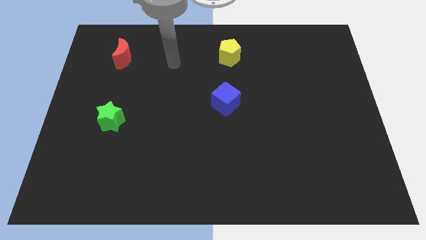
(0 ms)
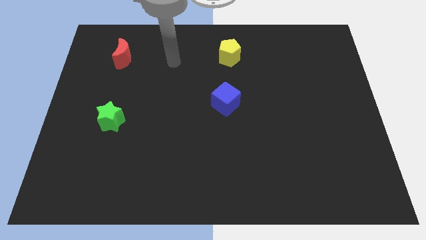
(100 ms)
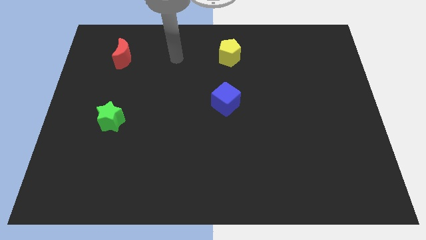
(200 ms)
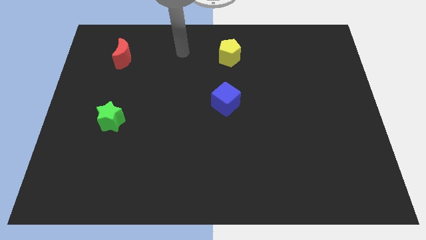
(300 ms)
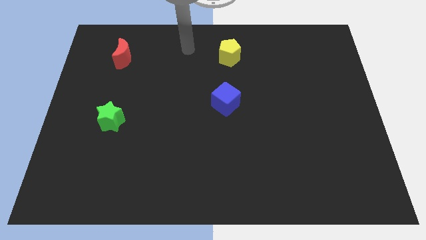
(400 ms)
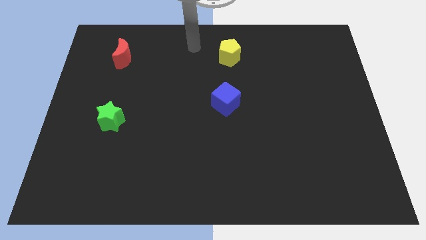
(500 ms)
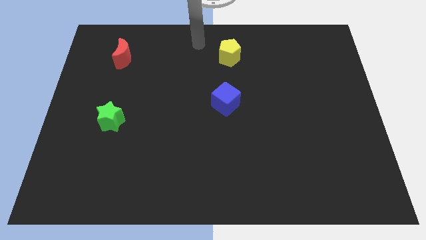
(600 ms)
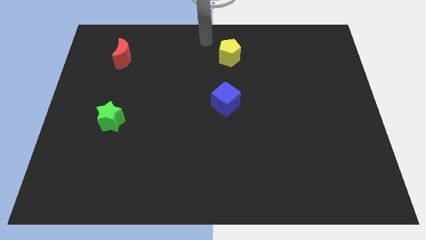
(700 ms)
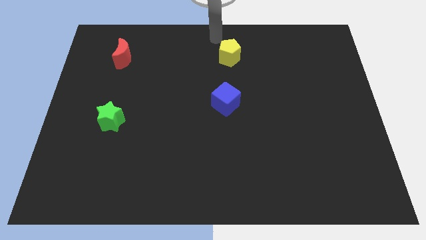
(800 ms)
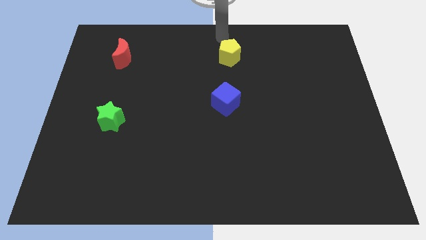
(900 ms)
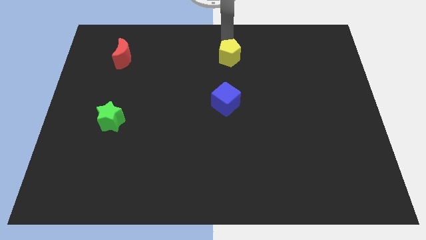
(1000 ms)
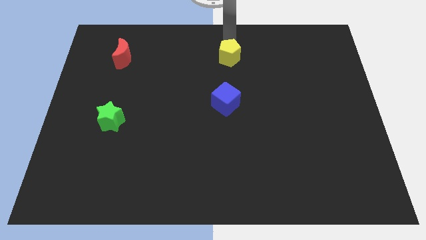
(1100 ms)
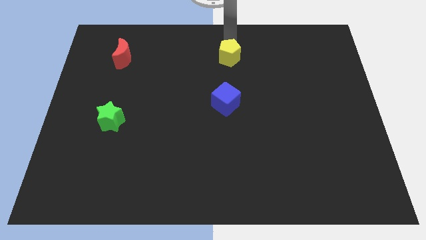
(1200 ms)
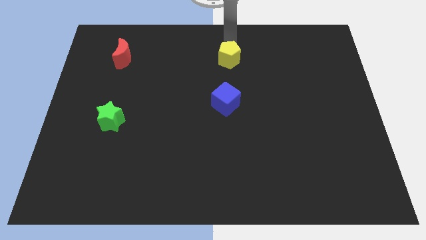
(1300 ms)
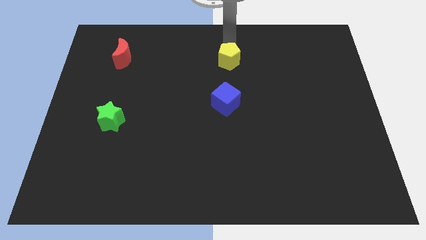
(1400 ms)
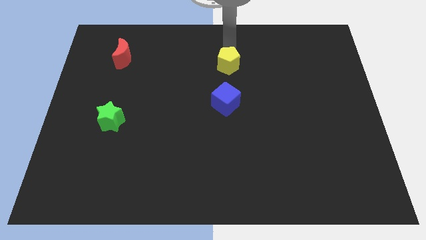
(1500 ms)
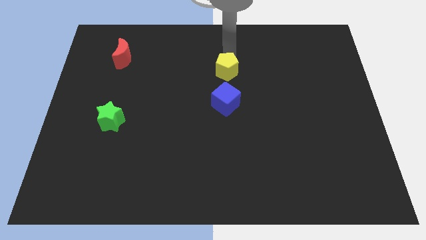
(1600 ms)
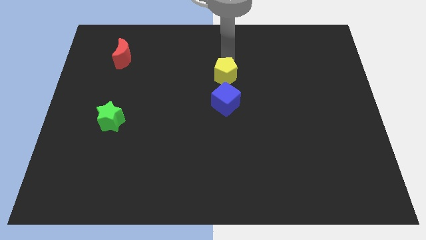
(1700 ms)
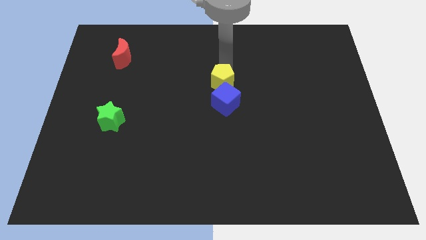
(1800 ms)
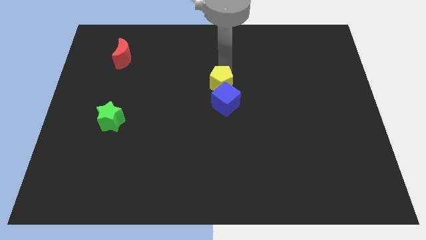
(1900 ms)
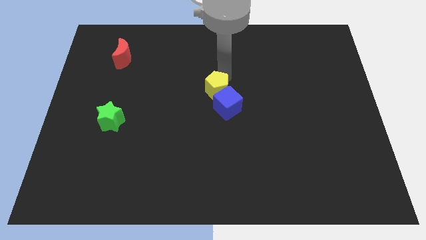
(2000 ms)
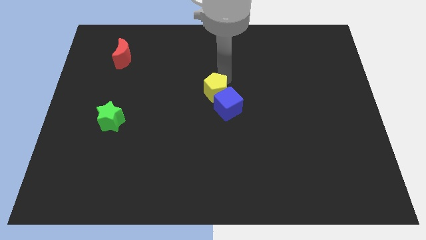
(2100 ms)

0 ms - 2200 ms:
put the yellow pentagon towards the blue cube

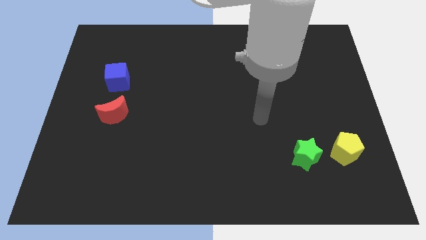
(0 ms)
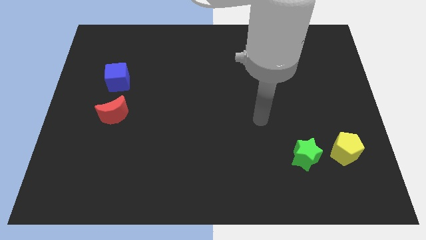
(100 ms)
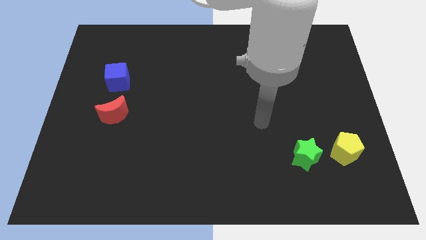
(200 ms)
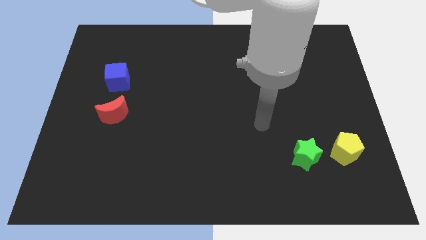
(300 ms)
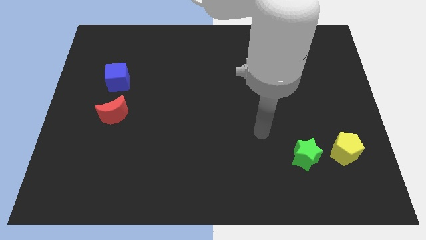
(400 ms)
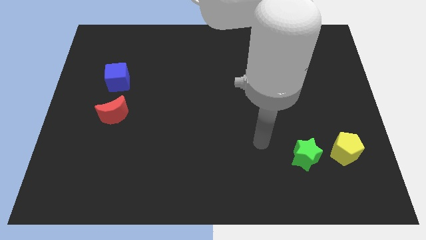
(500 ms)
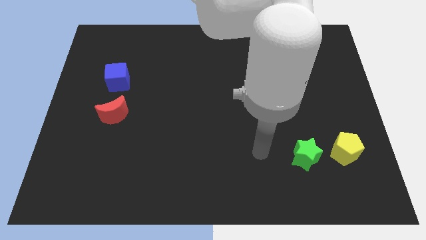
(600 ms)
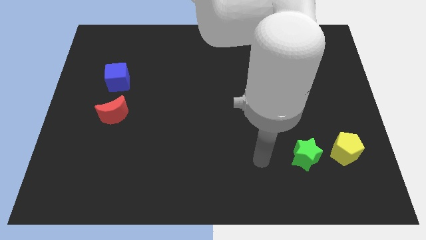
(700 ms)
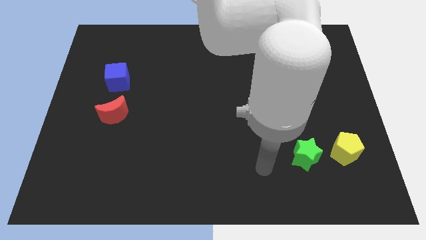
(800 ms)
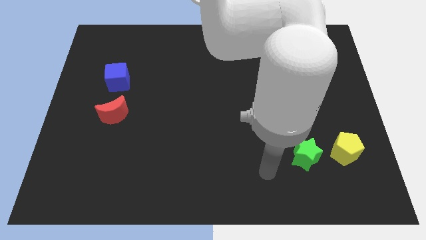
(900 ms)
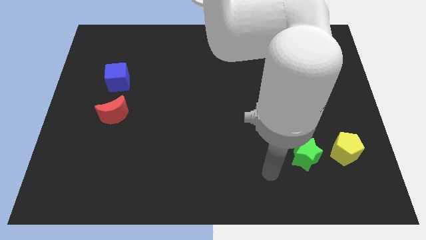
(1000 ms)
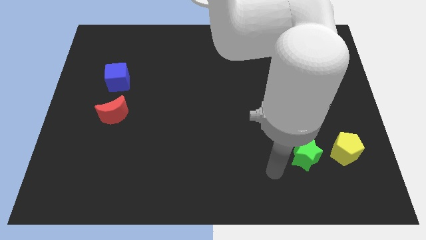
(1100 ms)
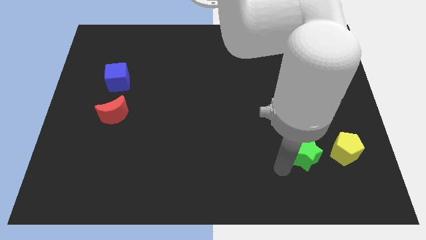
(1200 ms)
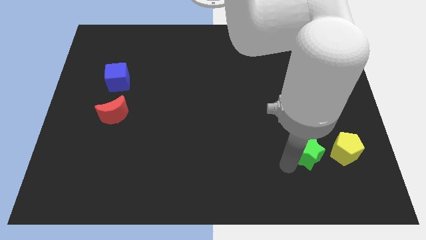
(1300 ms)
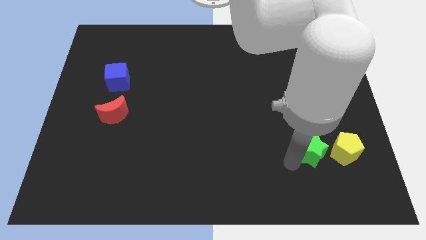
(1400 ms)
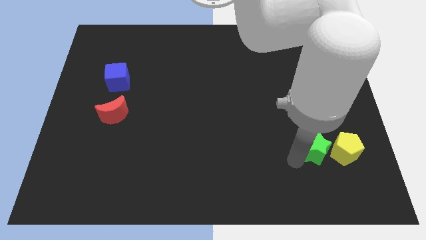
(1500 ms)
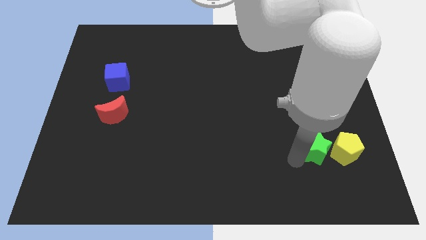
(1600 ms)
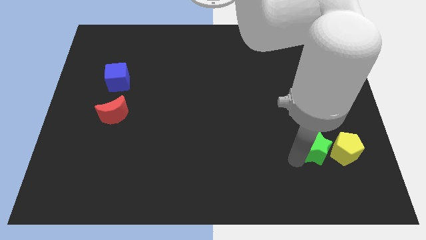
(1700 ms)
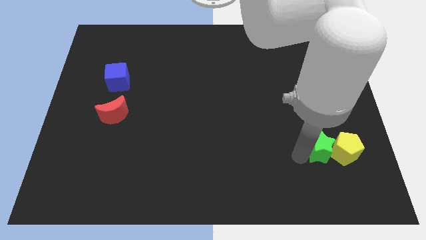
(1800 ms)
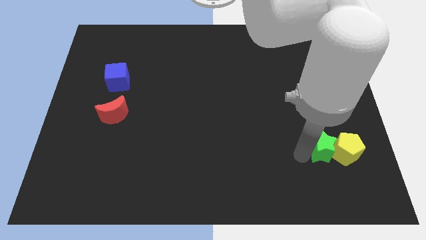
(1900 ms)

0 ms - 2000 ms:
move the green star towards the yellow pentagon

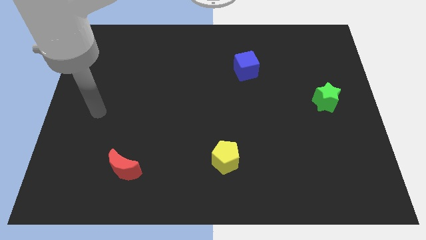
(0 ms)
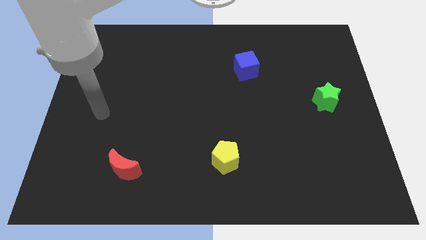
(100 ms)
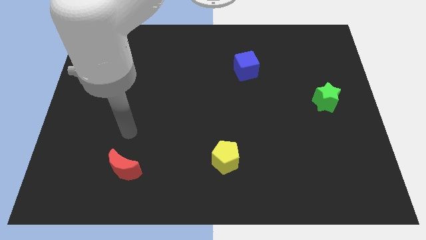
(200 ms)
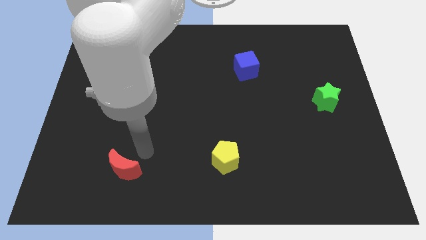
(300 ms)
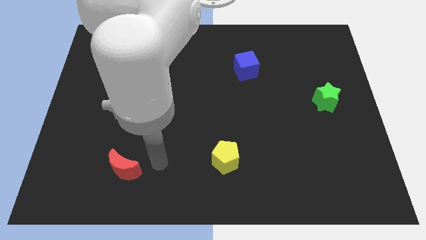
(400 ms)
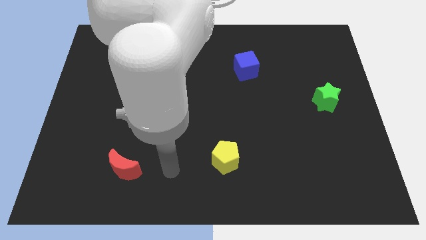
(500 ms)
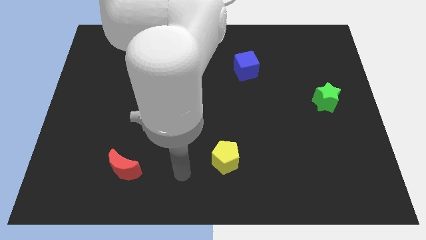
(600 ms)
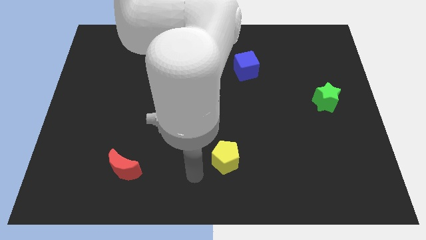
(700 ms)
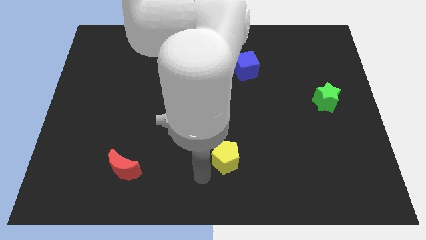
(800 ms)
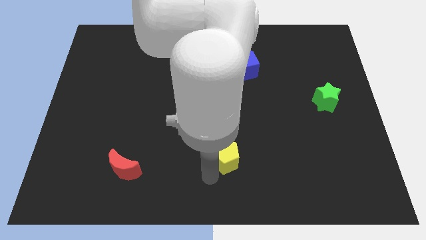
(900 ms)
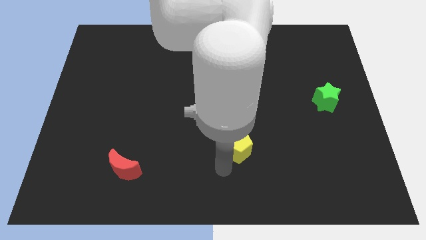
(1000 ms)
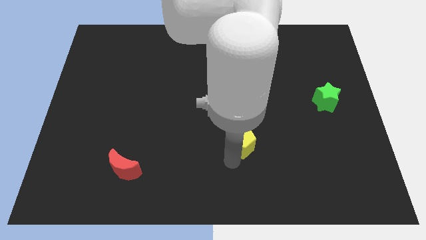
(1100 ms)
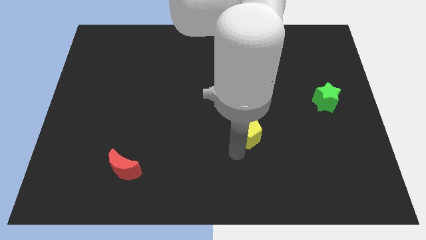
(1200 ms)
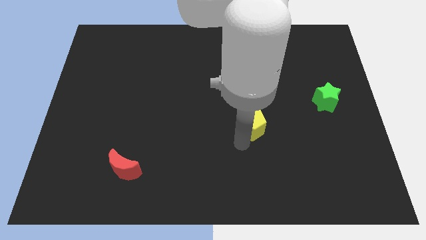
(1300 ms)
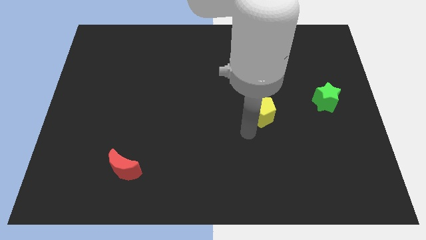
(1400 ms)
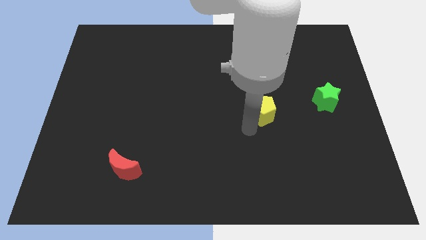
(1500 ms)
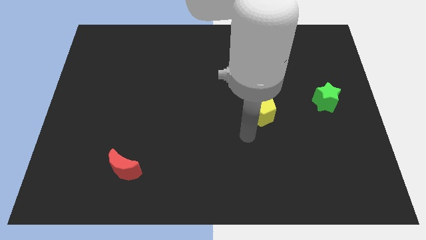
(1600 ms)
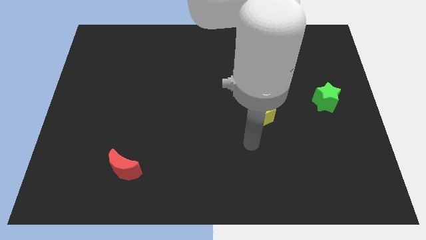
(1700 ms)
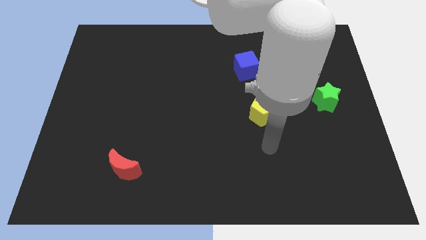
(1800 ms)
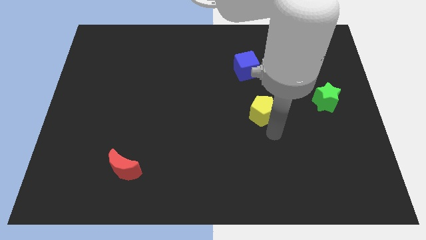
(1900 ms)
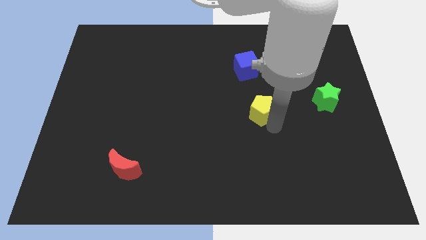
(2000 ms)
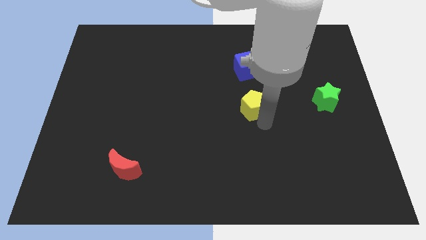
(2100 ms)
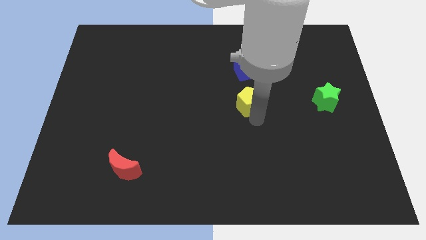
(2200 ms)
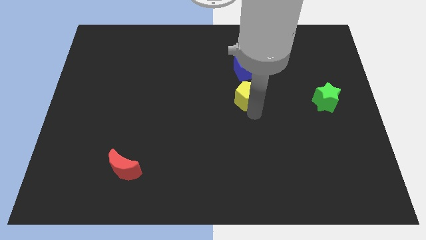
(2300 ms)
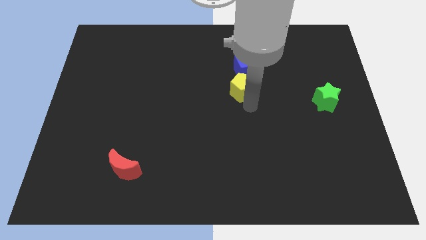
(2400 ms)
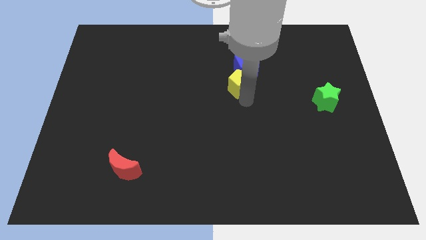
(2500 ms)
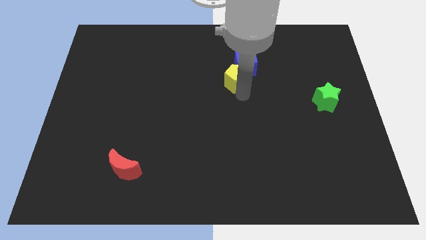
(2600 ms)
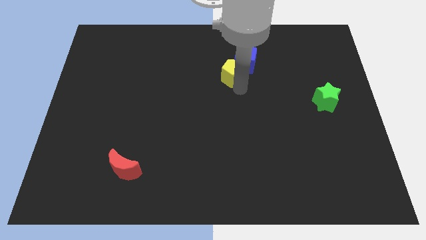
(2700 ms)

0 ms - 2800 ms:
put the pentagon towards the cube

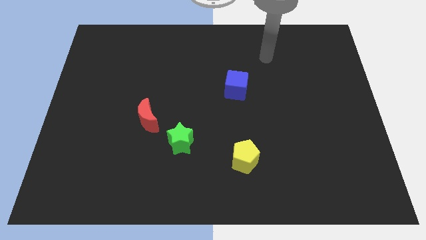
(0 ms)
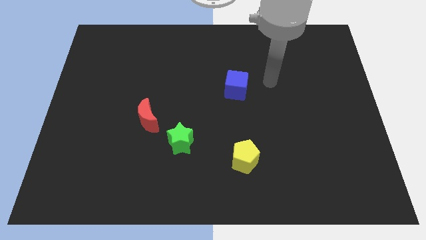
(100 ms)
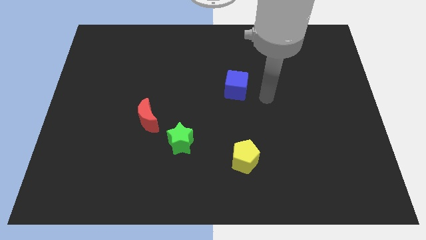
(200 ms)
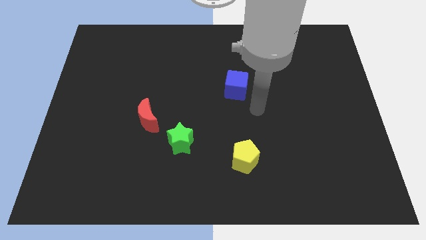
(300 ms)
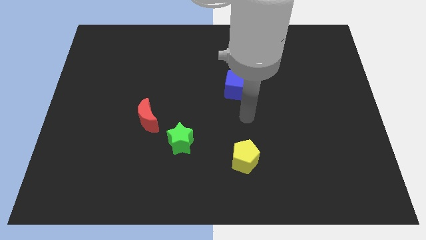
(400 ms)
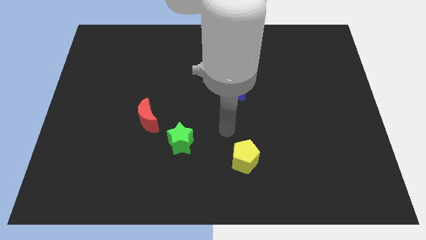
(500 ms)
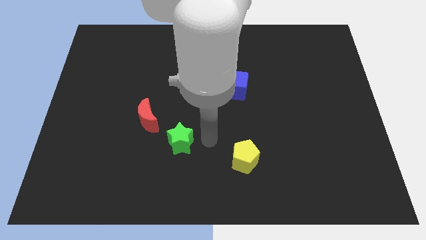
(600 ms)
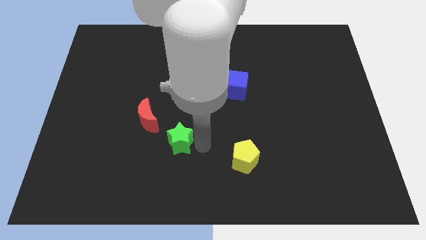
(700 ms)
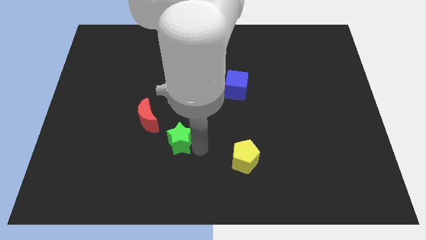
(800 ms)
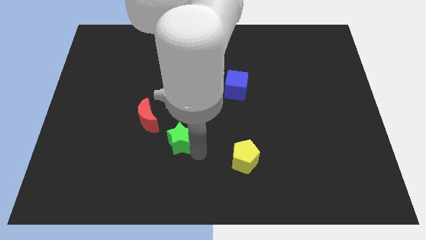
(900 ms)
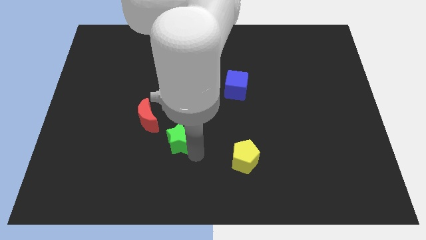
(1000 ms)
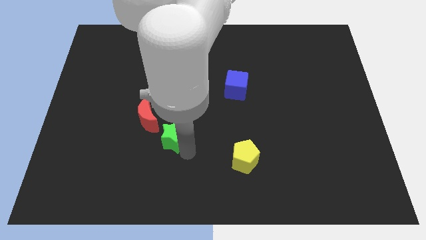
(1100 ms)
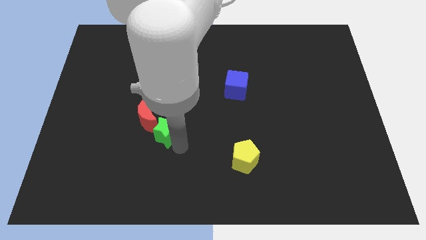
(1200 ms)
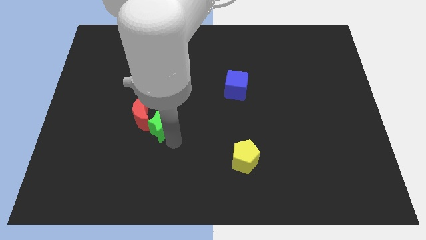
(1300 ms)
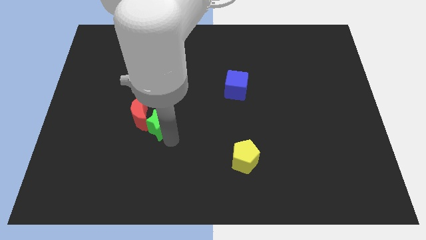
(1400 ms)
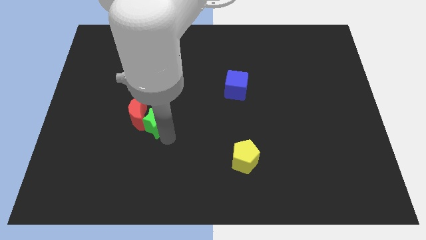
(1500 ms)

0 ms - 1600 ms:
put the green block next to the moon

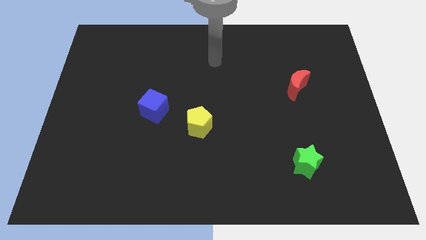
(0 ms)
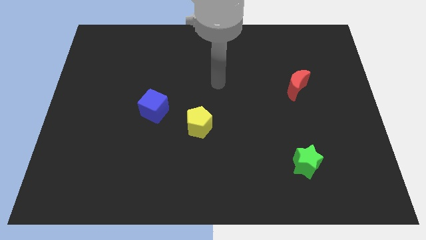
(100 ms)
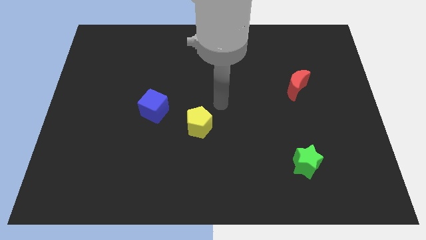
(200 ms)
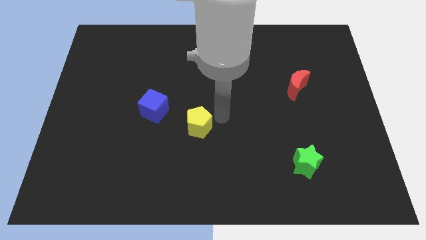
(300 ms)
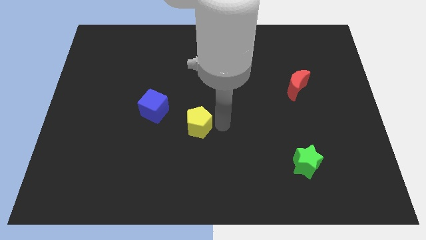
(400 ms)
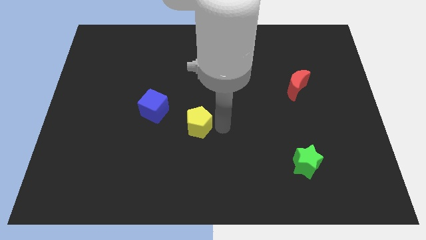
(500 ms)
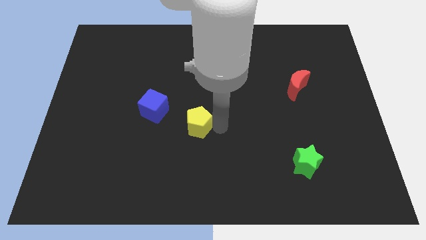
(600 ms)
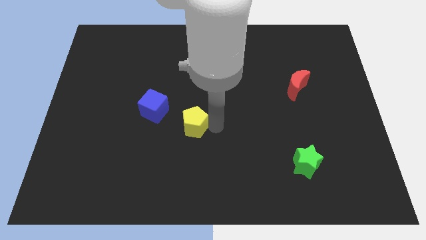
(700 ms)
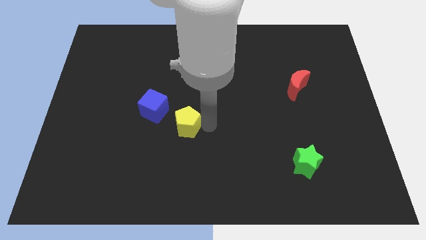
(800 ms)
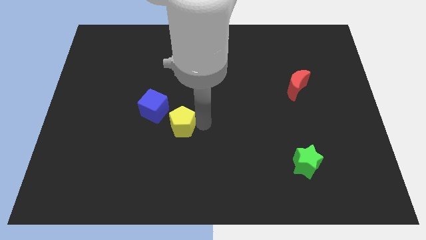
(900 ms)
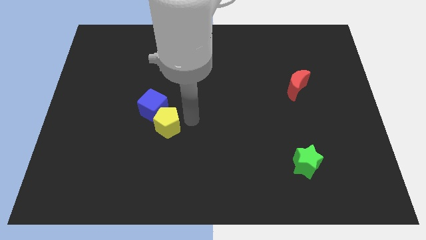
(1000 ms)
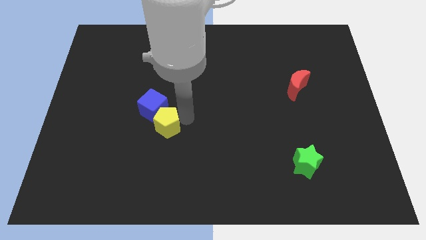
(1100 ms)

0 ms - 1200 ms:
put the pentagon close to the blue cube
